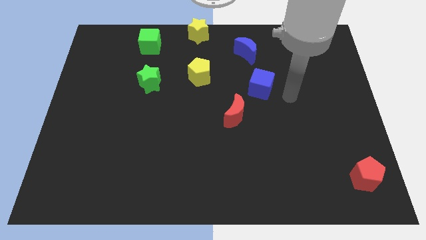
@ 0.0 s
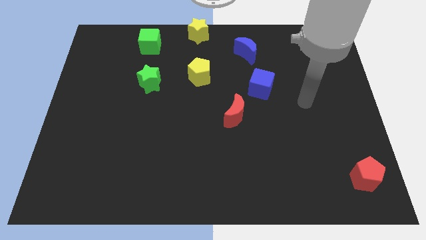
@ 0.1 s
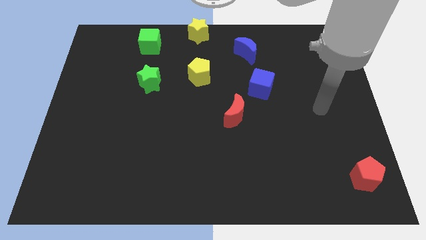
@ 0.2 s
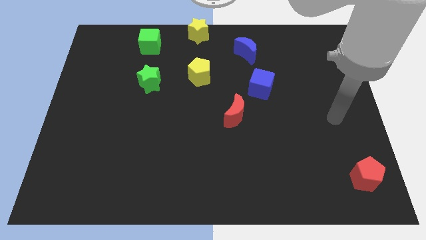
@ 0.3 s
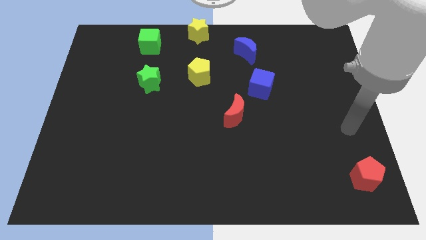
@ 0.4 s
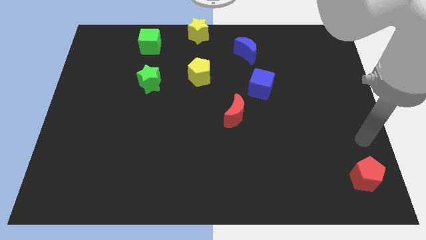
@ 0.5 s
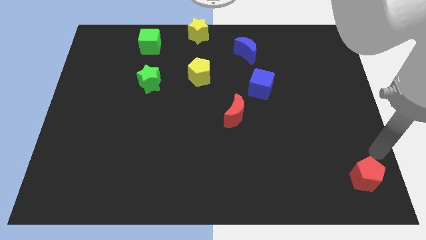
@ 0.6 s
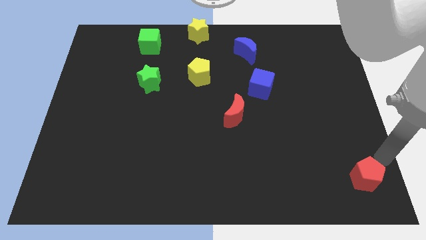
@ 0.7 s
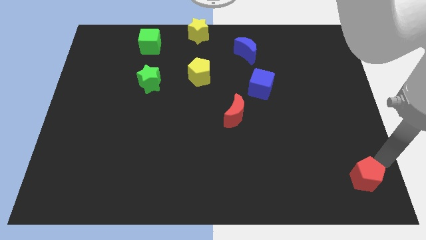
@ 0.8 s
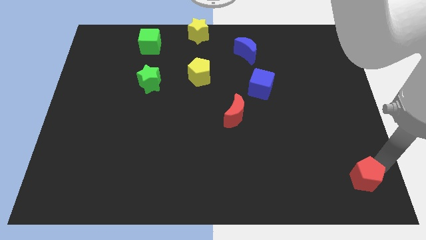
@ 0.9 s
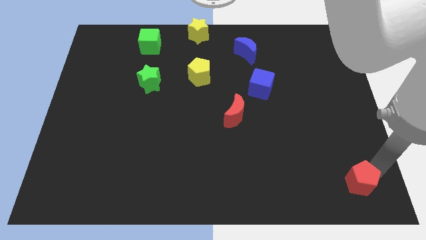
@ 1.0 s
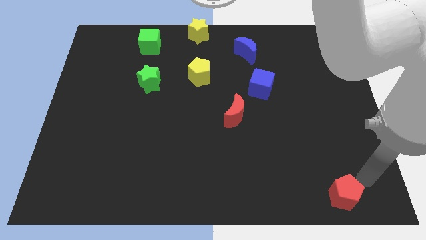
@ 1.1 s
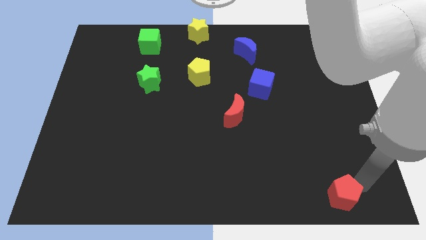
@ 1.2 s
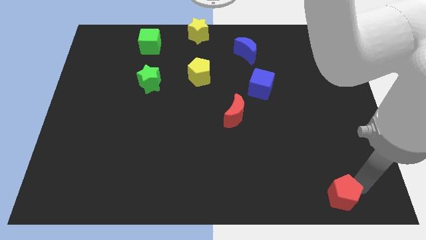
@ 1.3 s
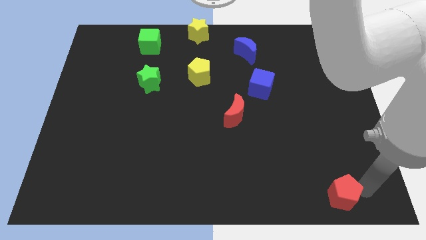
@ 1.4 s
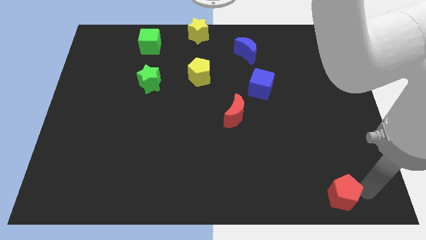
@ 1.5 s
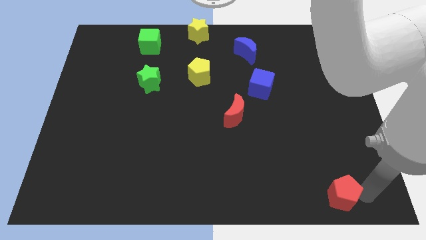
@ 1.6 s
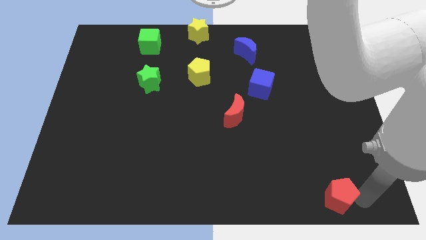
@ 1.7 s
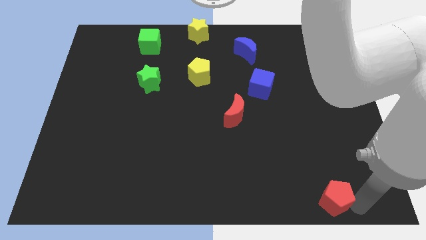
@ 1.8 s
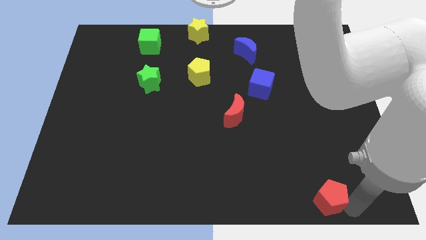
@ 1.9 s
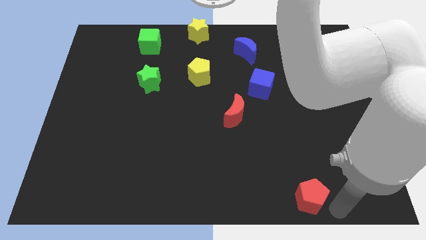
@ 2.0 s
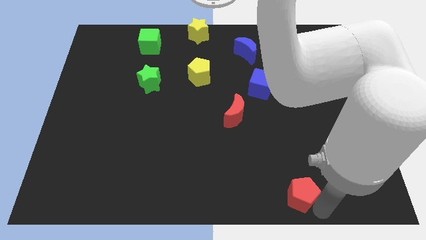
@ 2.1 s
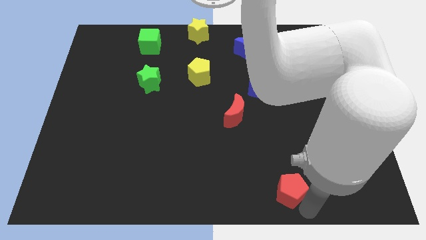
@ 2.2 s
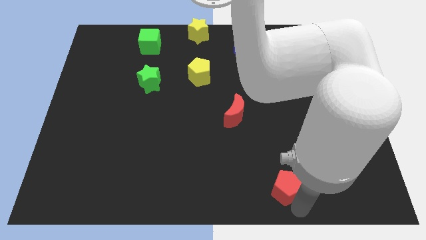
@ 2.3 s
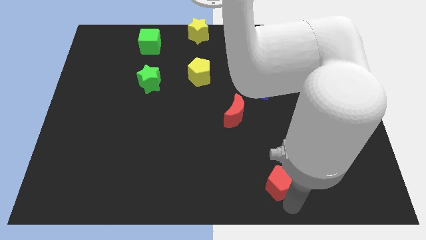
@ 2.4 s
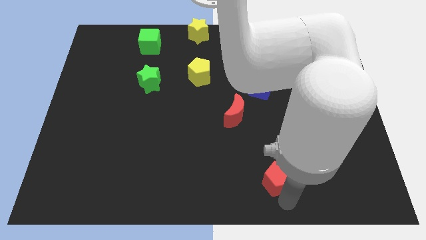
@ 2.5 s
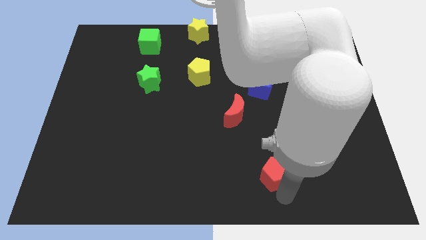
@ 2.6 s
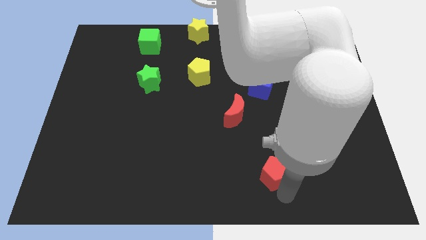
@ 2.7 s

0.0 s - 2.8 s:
move the red pentagon vertically below the blue cube

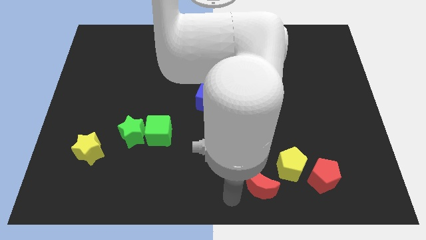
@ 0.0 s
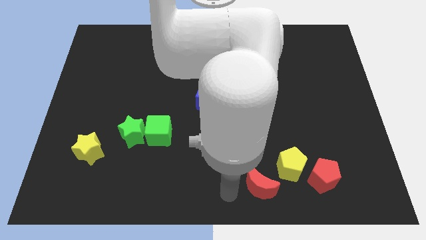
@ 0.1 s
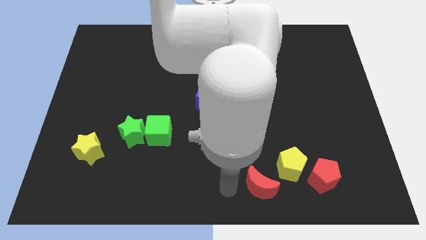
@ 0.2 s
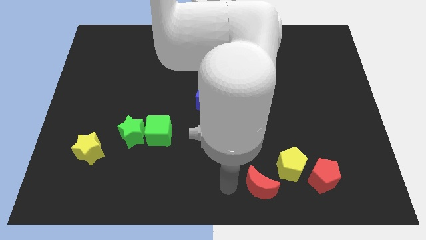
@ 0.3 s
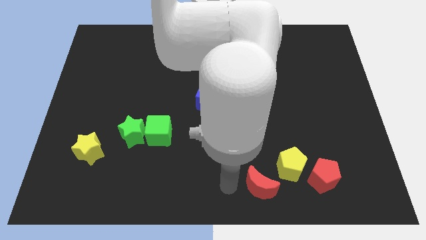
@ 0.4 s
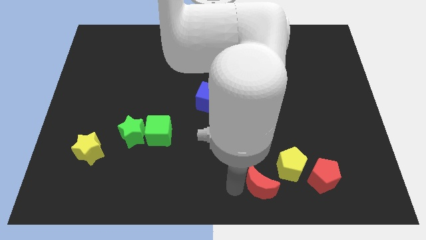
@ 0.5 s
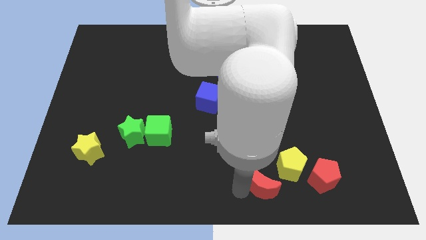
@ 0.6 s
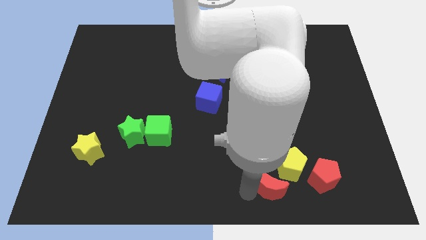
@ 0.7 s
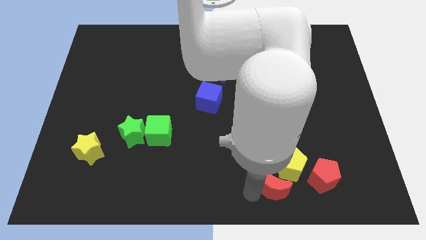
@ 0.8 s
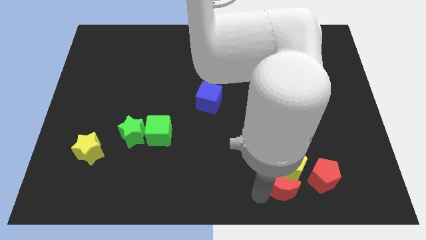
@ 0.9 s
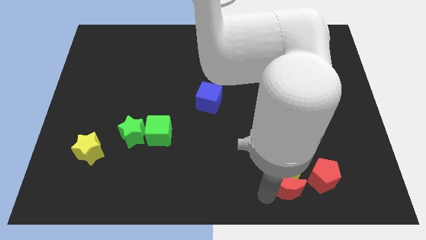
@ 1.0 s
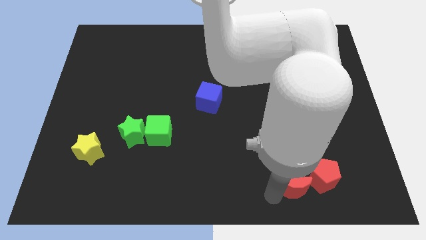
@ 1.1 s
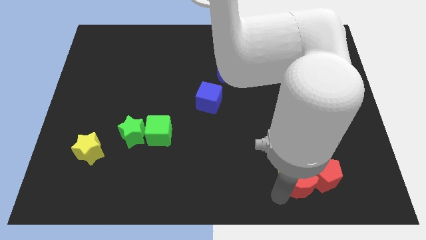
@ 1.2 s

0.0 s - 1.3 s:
move the red crescent into the red pentagon

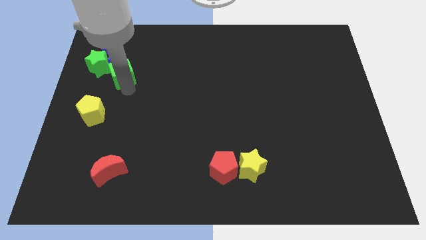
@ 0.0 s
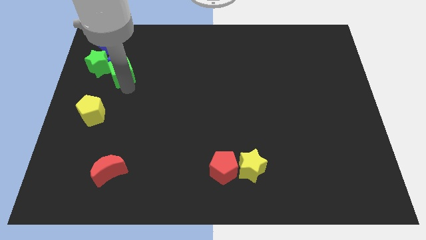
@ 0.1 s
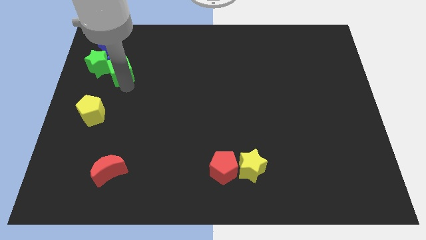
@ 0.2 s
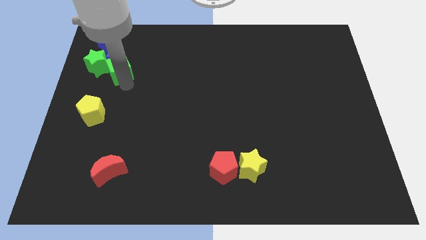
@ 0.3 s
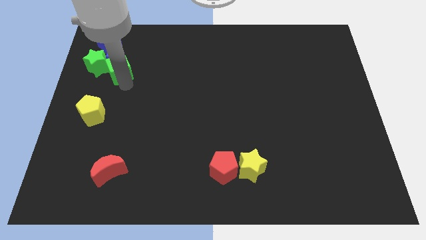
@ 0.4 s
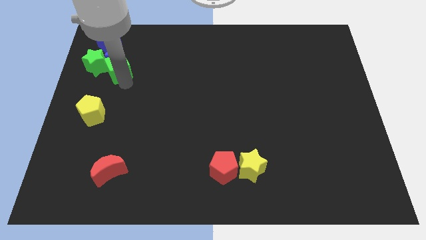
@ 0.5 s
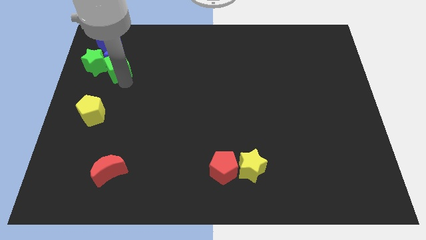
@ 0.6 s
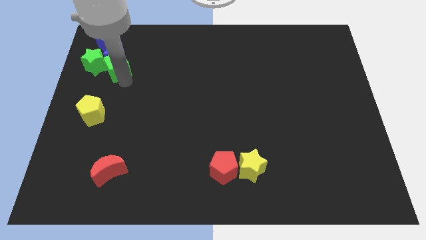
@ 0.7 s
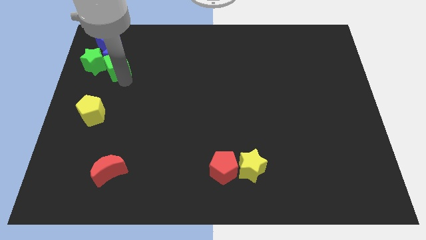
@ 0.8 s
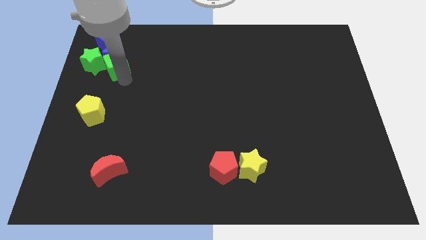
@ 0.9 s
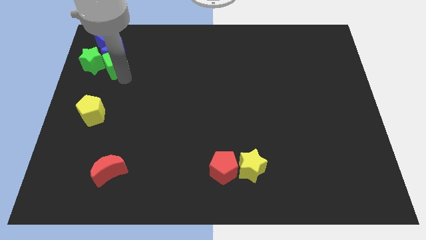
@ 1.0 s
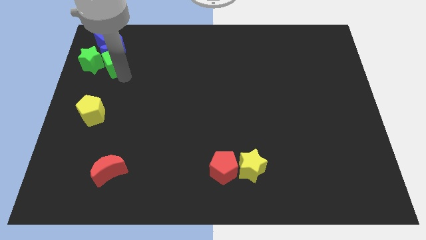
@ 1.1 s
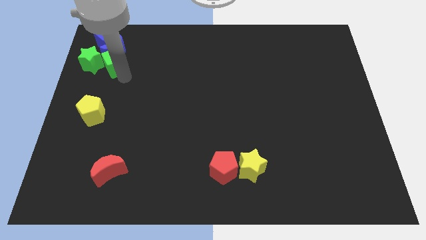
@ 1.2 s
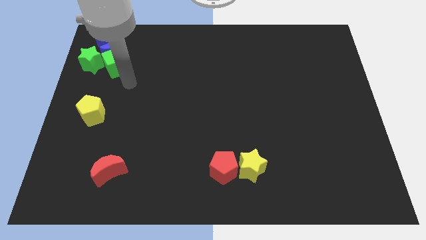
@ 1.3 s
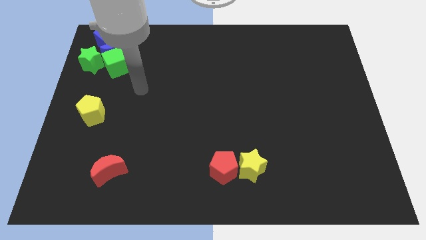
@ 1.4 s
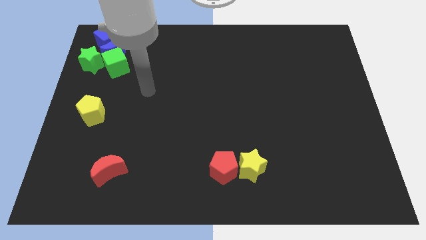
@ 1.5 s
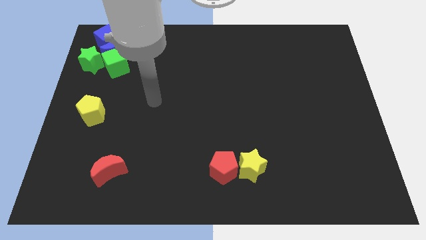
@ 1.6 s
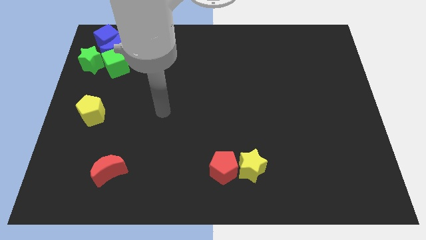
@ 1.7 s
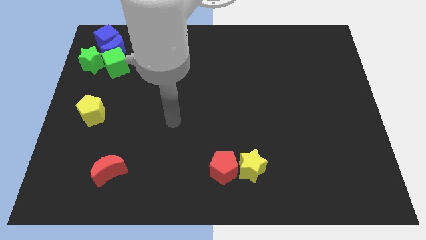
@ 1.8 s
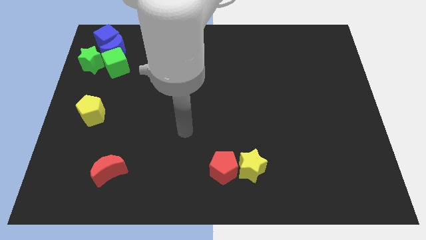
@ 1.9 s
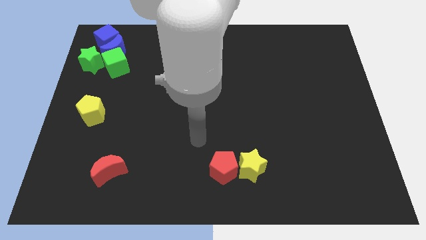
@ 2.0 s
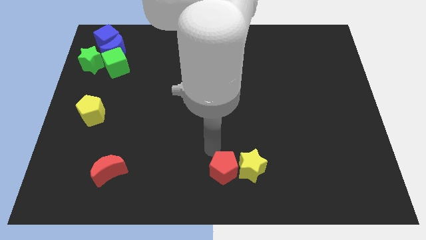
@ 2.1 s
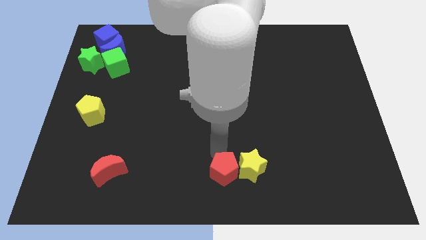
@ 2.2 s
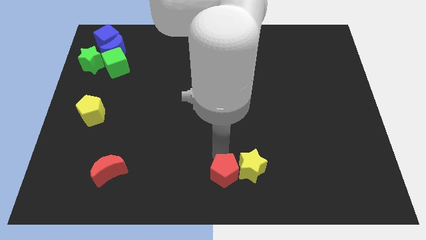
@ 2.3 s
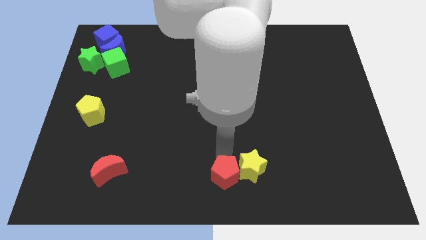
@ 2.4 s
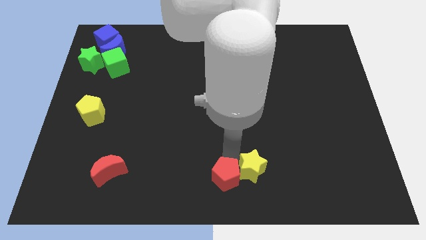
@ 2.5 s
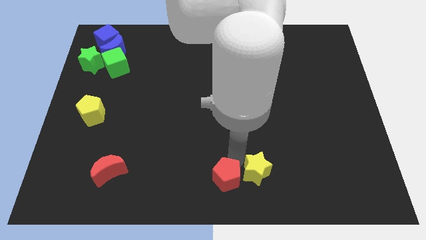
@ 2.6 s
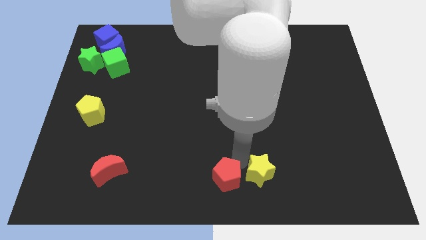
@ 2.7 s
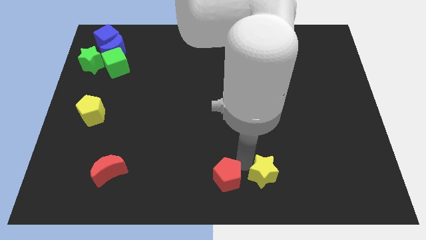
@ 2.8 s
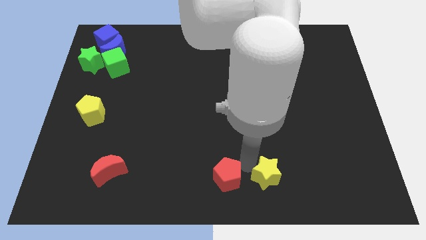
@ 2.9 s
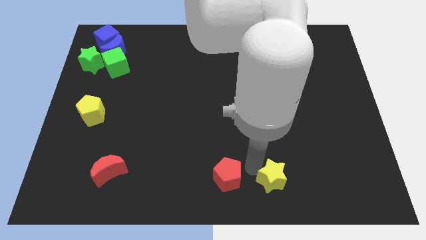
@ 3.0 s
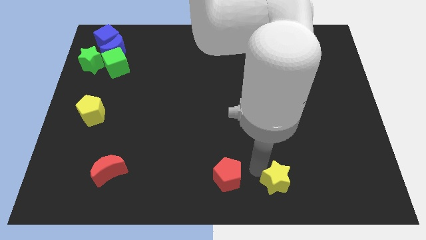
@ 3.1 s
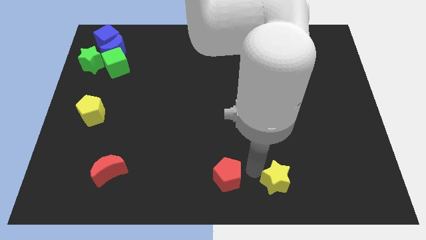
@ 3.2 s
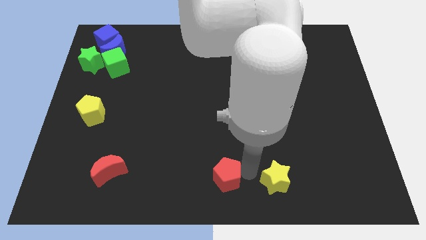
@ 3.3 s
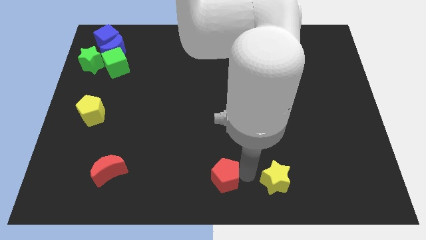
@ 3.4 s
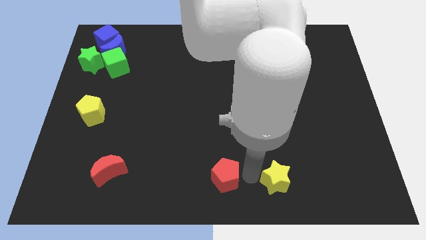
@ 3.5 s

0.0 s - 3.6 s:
move your arm near to the yellow star

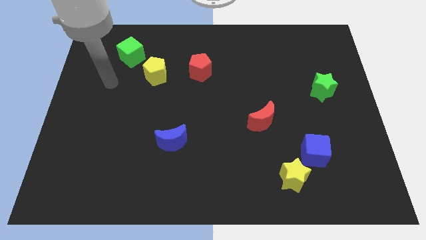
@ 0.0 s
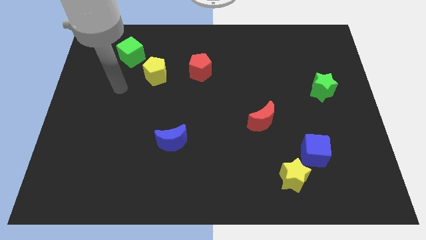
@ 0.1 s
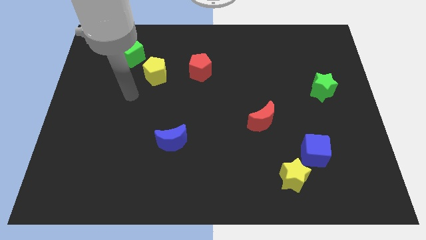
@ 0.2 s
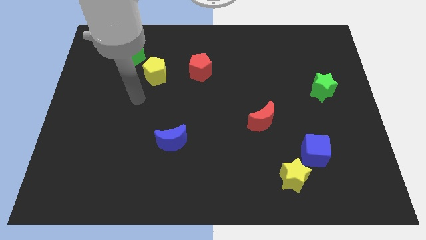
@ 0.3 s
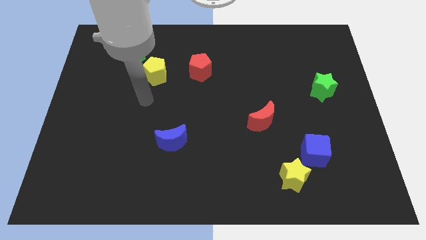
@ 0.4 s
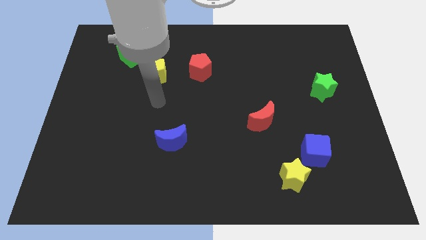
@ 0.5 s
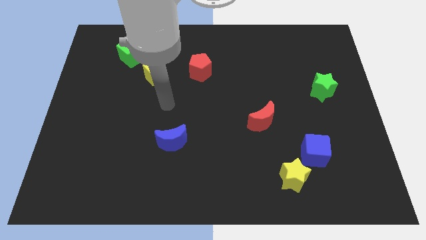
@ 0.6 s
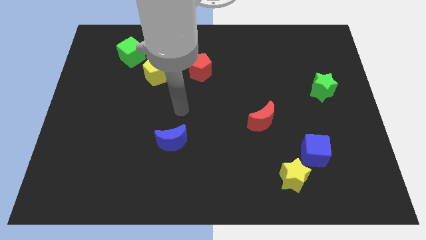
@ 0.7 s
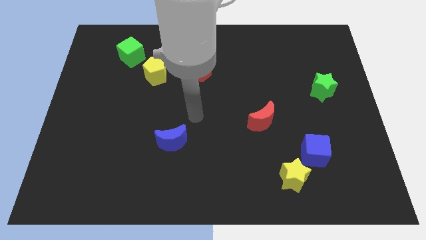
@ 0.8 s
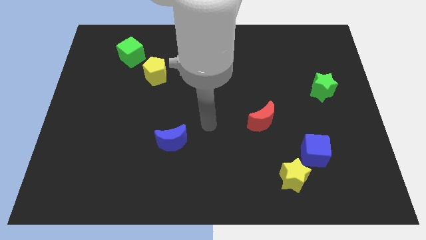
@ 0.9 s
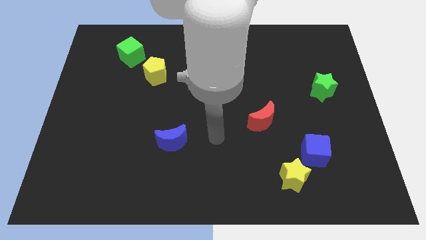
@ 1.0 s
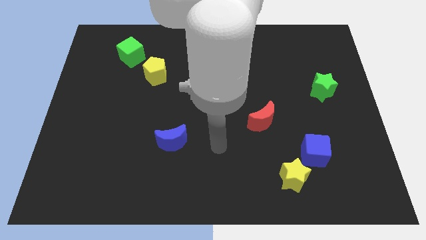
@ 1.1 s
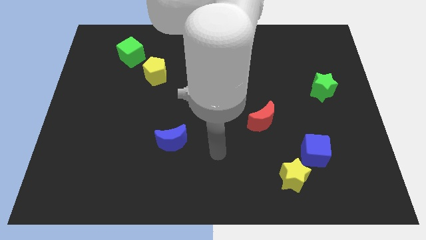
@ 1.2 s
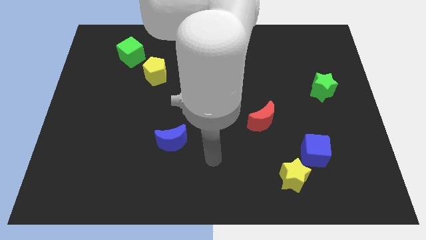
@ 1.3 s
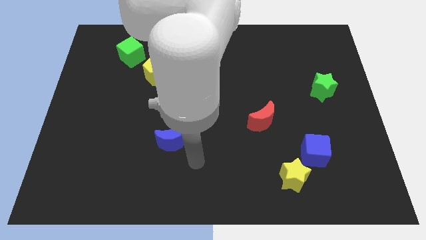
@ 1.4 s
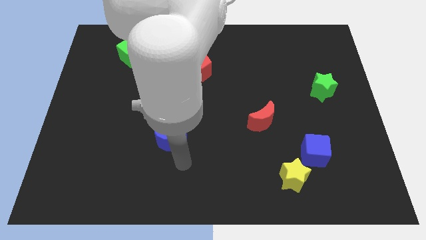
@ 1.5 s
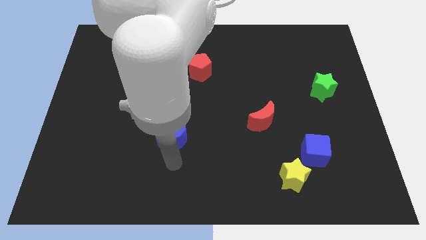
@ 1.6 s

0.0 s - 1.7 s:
go near the blue moon
